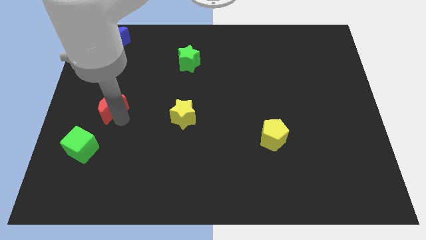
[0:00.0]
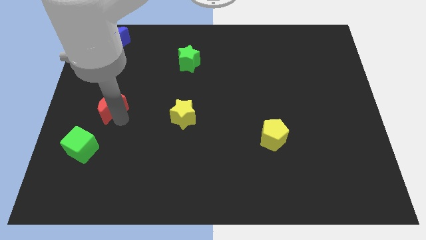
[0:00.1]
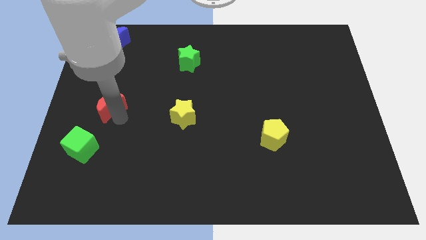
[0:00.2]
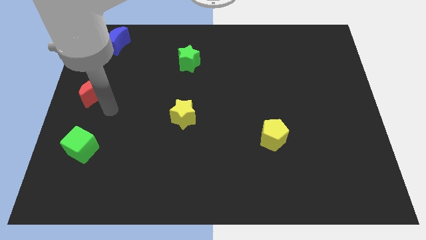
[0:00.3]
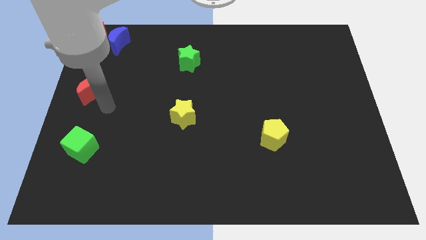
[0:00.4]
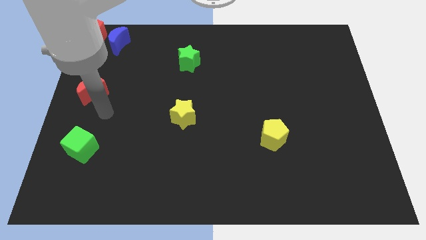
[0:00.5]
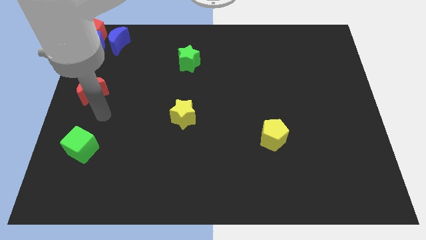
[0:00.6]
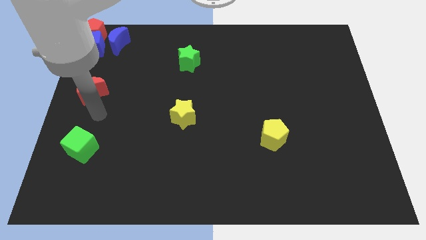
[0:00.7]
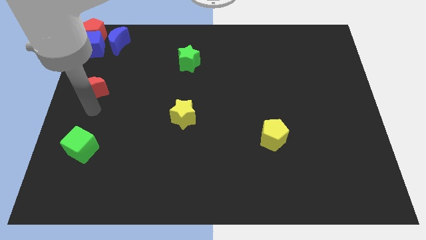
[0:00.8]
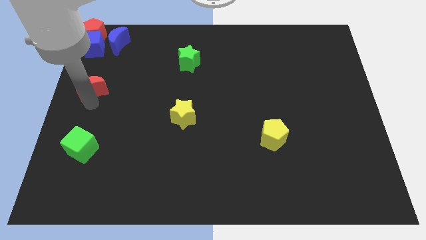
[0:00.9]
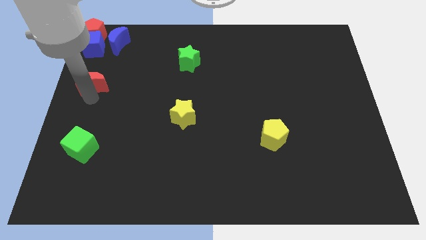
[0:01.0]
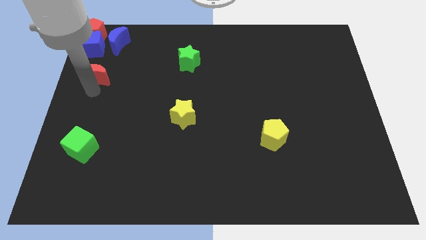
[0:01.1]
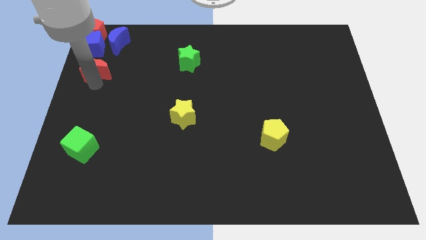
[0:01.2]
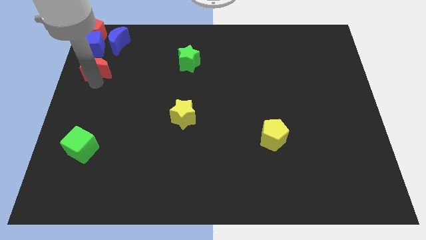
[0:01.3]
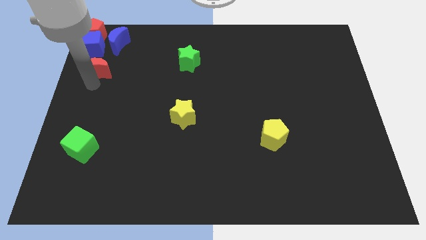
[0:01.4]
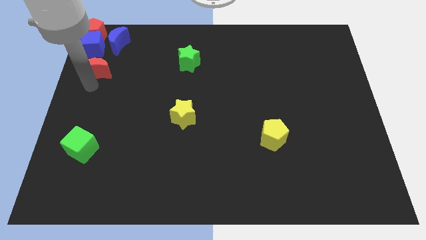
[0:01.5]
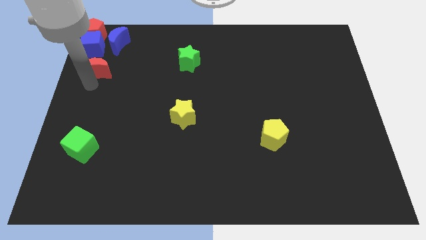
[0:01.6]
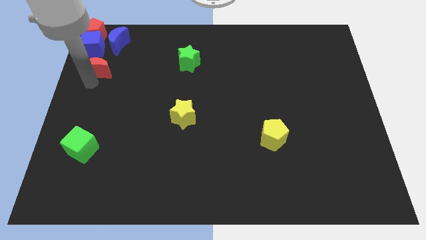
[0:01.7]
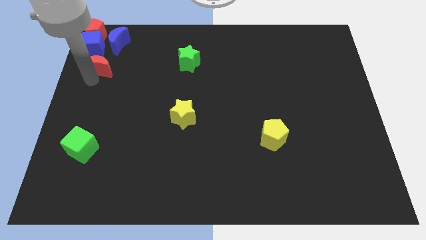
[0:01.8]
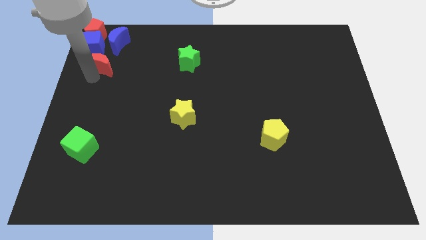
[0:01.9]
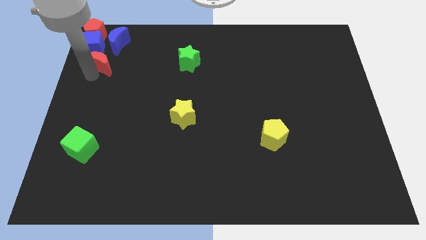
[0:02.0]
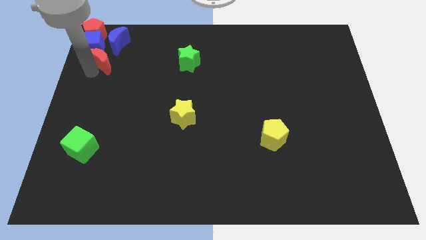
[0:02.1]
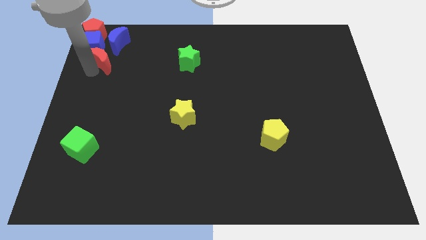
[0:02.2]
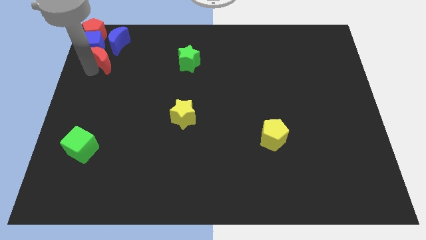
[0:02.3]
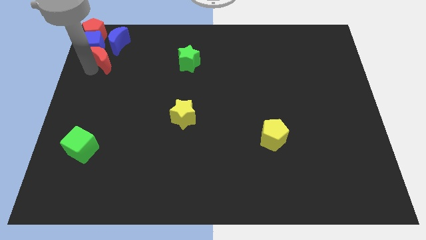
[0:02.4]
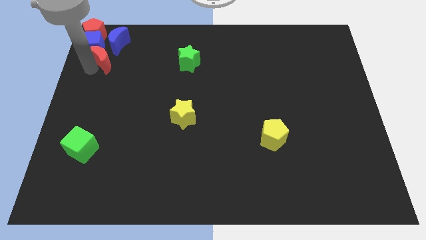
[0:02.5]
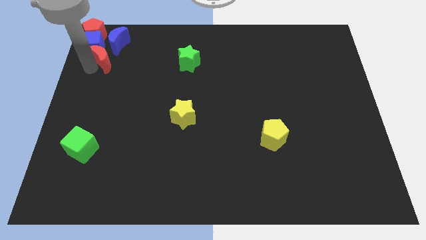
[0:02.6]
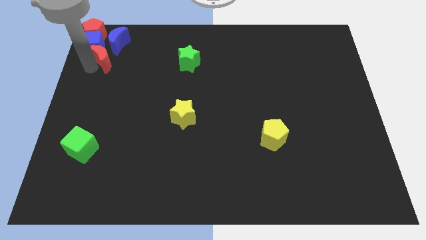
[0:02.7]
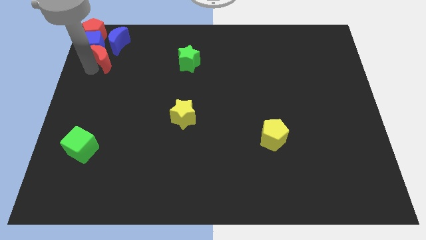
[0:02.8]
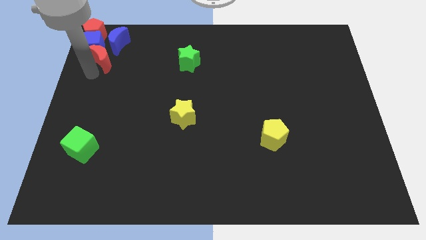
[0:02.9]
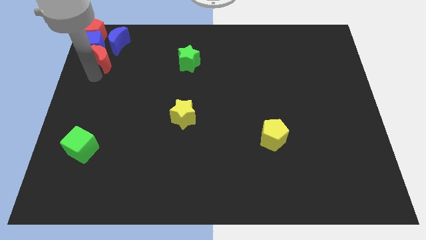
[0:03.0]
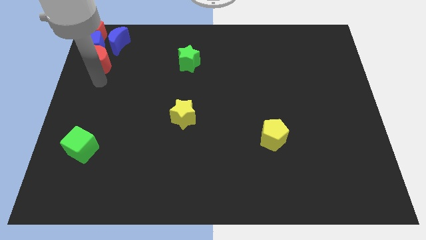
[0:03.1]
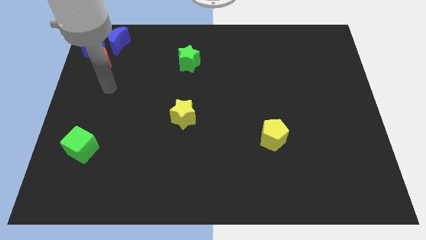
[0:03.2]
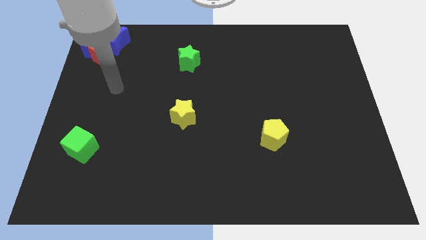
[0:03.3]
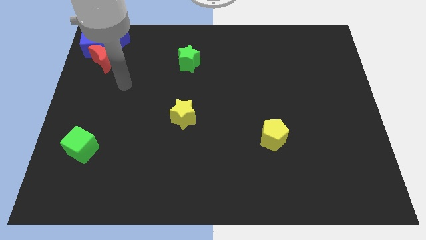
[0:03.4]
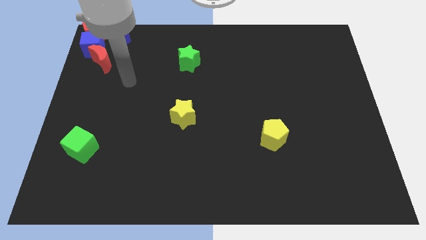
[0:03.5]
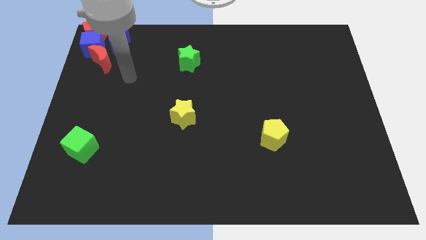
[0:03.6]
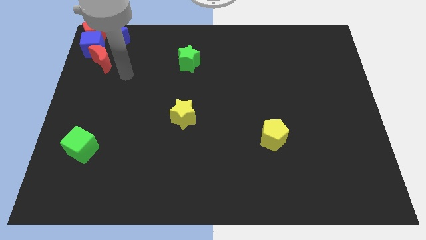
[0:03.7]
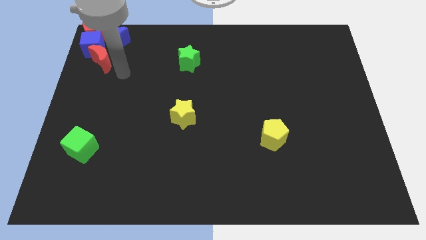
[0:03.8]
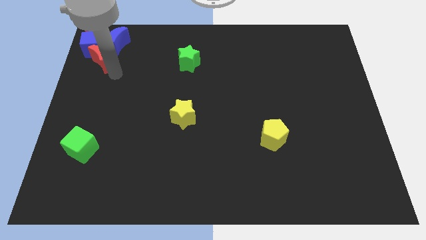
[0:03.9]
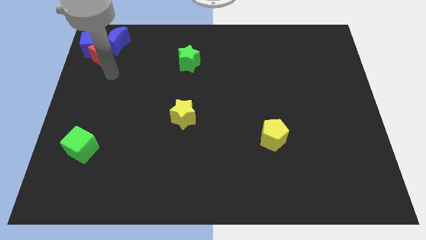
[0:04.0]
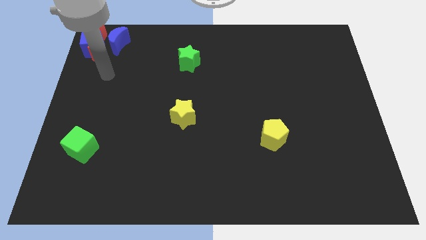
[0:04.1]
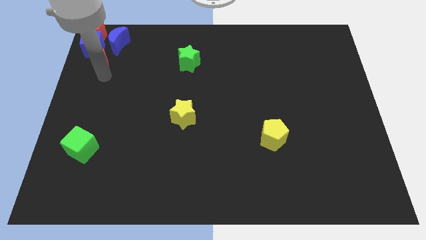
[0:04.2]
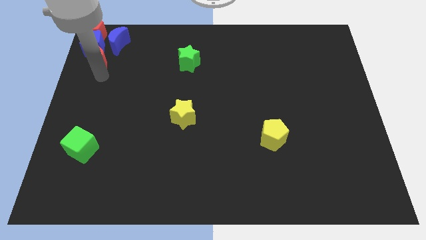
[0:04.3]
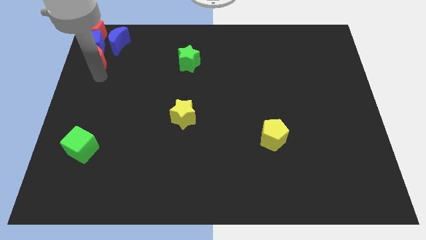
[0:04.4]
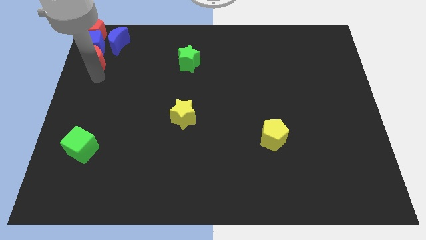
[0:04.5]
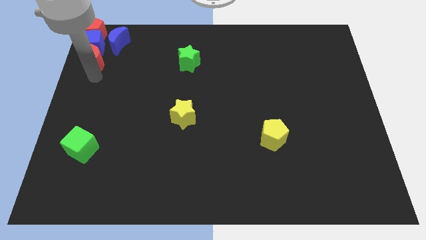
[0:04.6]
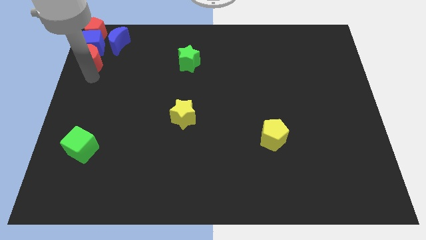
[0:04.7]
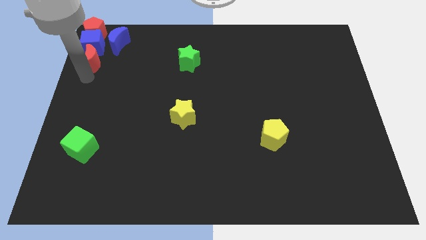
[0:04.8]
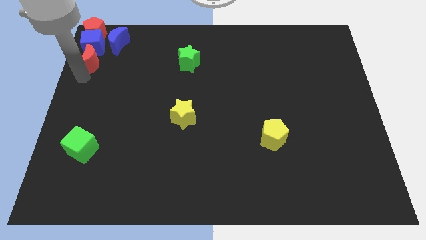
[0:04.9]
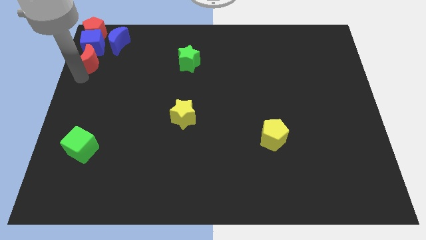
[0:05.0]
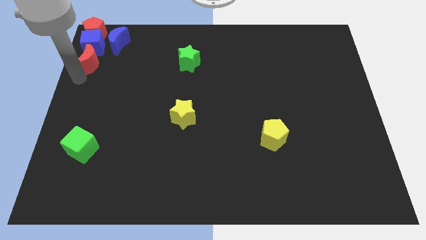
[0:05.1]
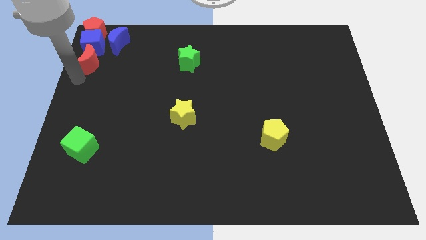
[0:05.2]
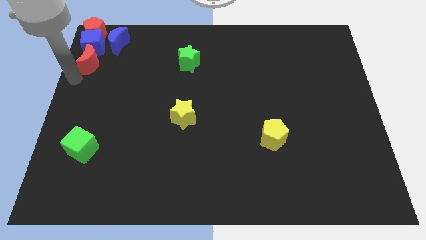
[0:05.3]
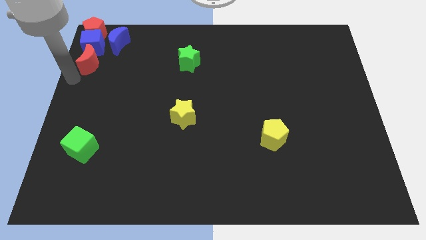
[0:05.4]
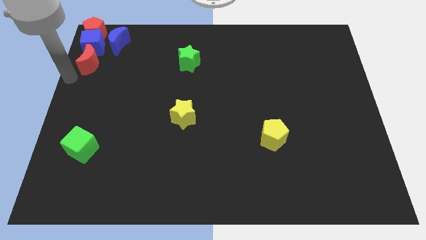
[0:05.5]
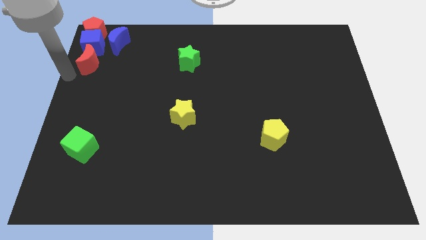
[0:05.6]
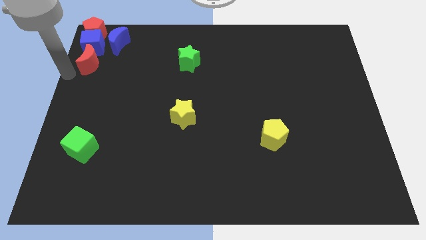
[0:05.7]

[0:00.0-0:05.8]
push the red crescent to the bottom of the blue cube

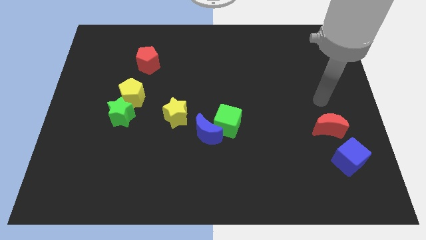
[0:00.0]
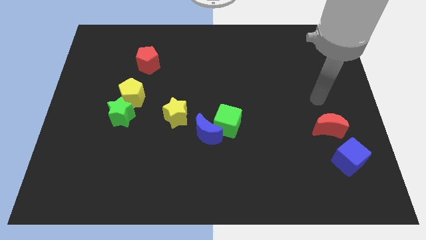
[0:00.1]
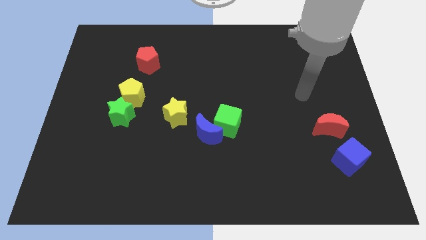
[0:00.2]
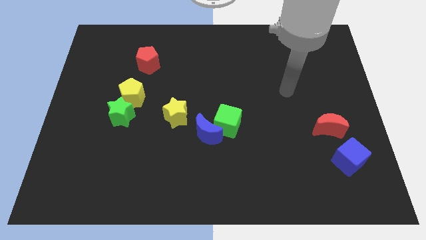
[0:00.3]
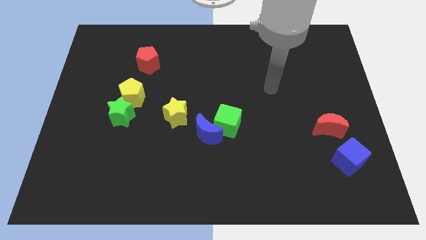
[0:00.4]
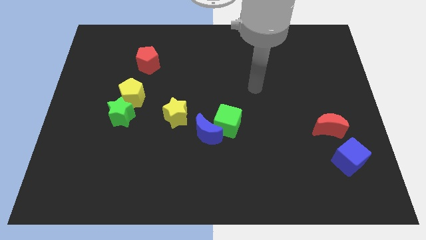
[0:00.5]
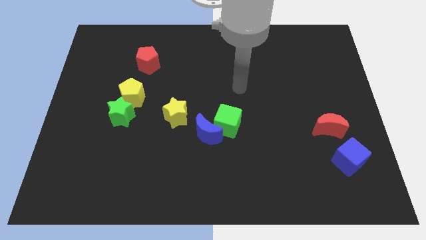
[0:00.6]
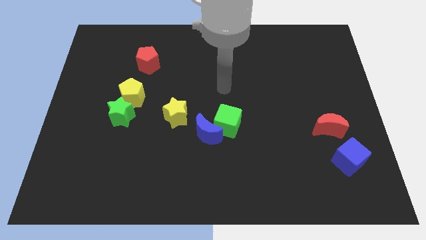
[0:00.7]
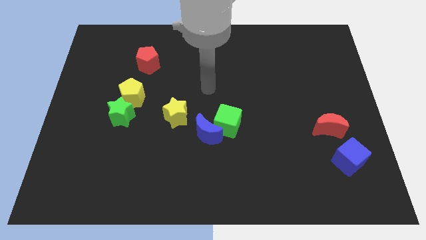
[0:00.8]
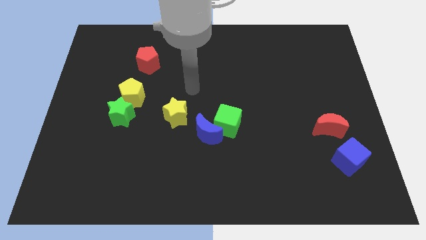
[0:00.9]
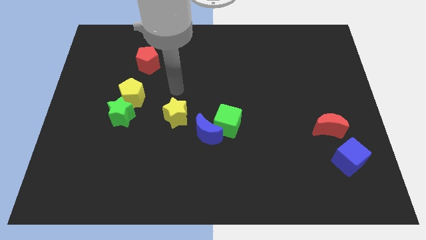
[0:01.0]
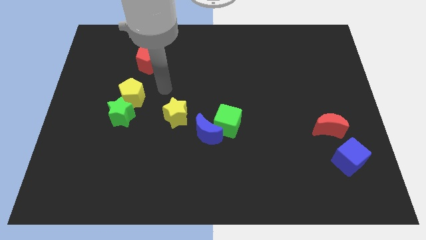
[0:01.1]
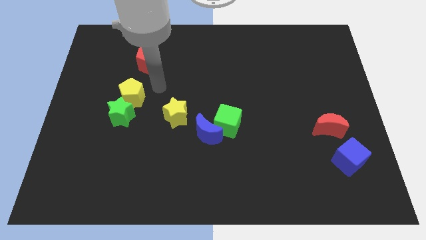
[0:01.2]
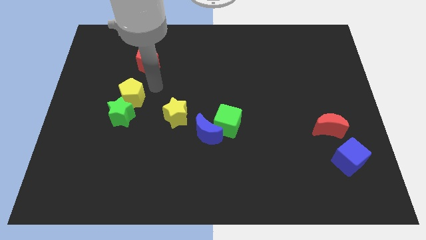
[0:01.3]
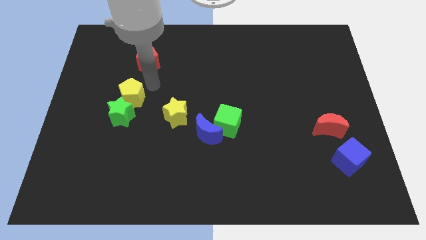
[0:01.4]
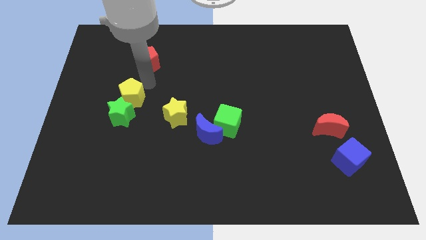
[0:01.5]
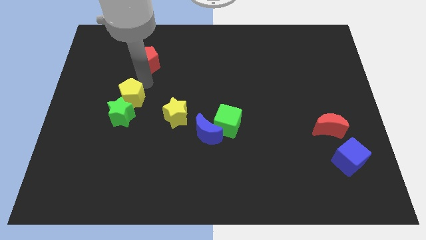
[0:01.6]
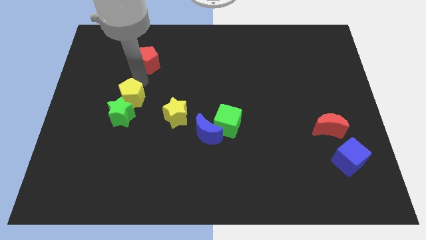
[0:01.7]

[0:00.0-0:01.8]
place the arm in between the red pentagon and yellow pentagon

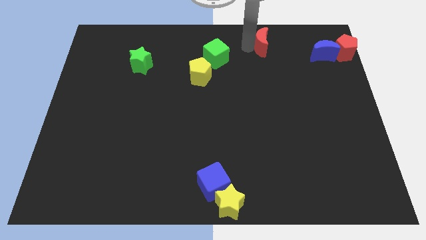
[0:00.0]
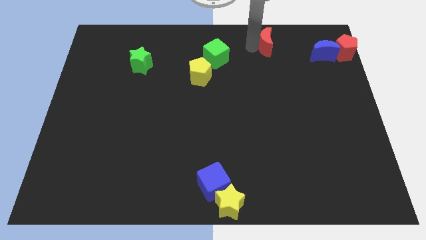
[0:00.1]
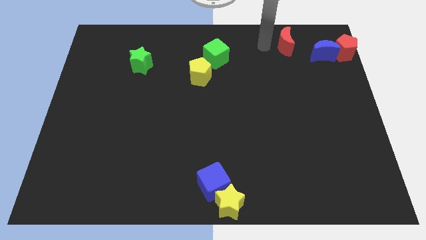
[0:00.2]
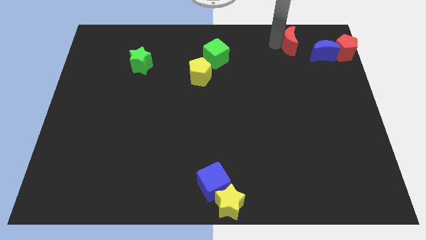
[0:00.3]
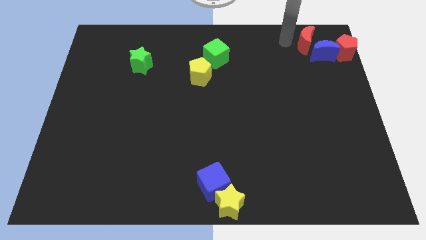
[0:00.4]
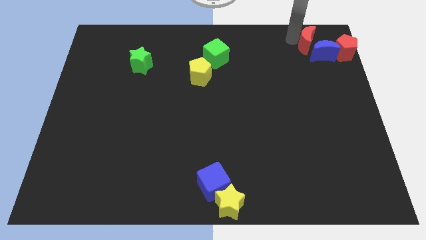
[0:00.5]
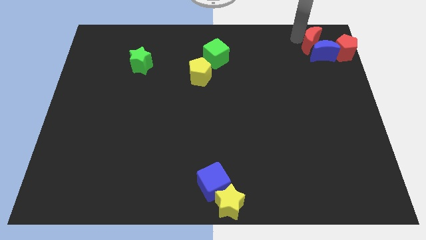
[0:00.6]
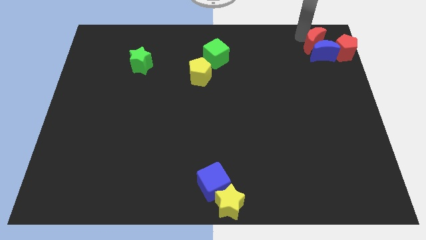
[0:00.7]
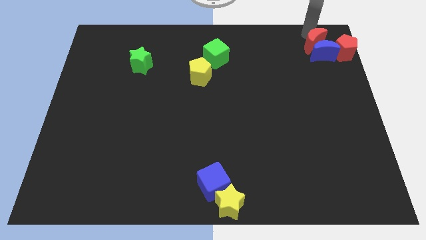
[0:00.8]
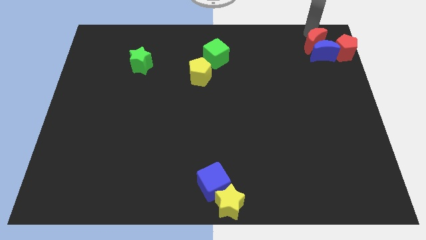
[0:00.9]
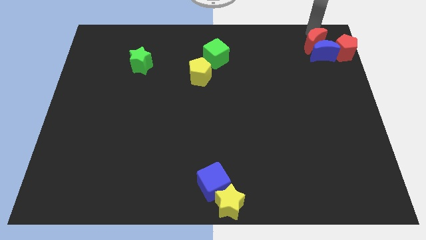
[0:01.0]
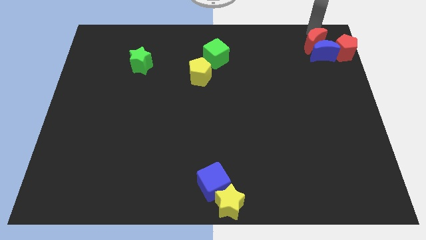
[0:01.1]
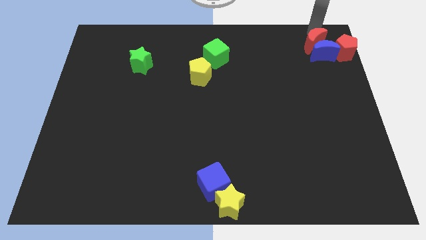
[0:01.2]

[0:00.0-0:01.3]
move the red moon into the blue moon

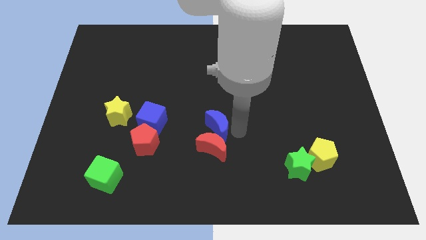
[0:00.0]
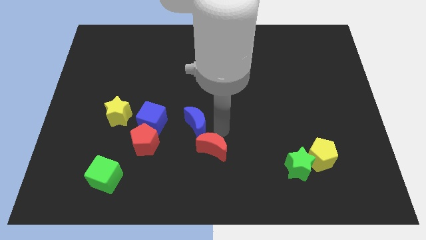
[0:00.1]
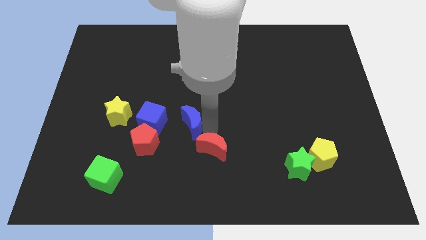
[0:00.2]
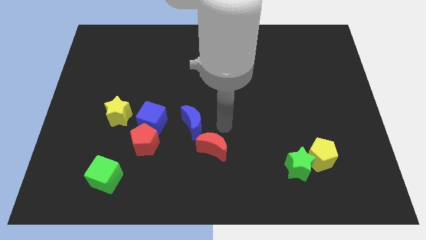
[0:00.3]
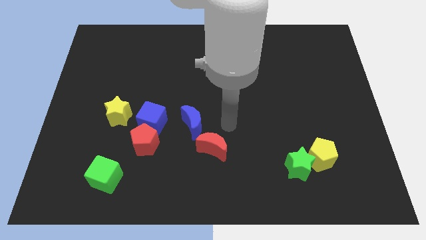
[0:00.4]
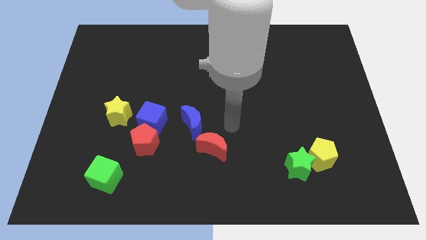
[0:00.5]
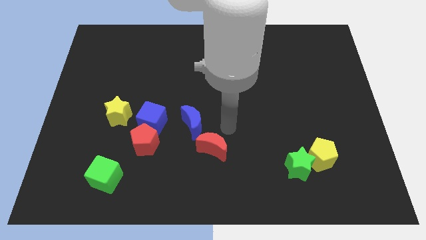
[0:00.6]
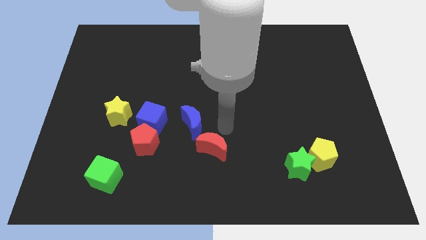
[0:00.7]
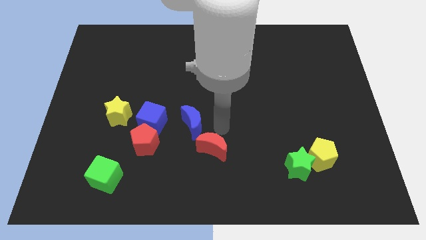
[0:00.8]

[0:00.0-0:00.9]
move blue crescent towards the blue cube
